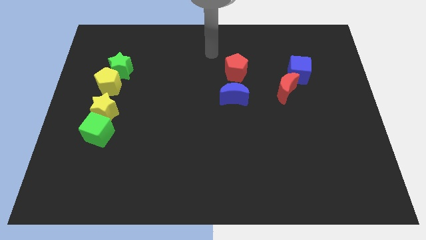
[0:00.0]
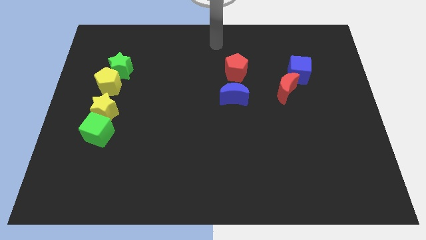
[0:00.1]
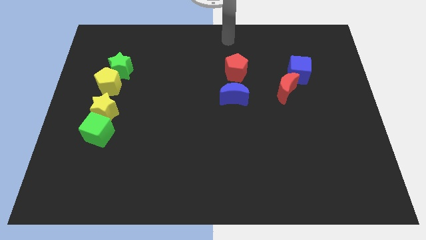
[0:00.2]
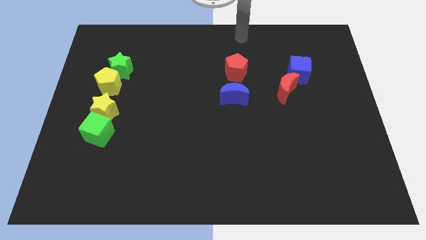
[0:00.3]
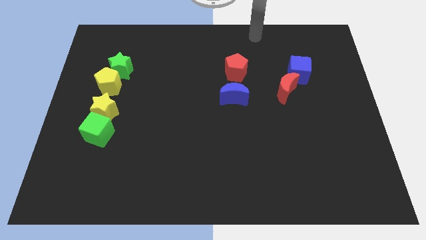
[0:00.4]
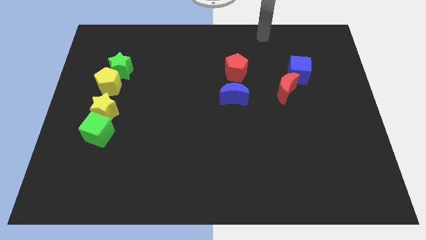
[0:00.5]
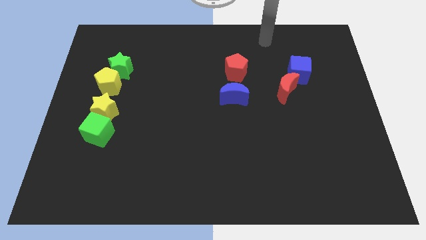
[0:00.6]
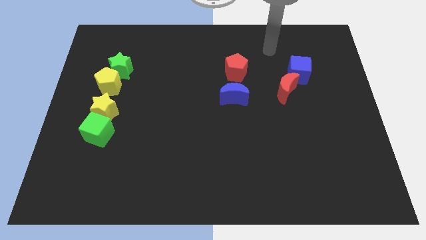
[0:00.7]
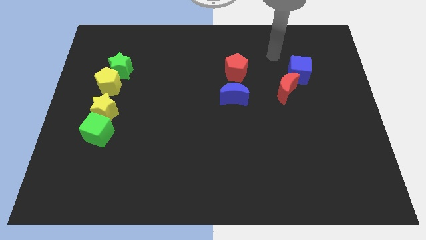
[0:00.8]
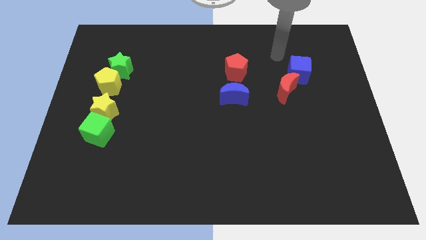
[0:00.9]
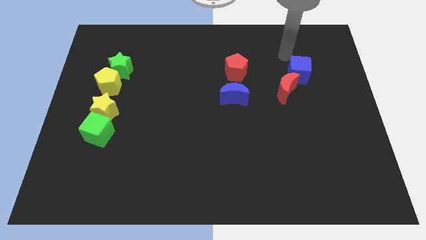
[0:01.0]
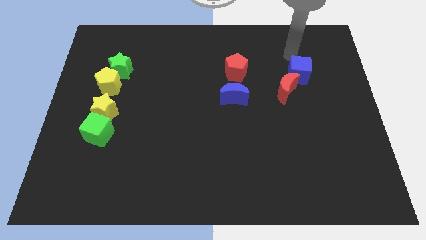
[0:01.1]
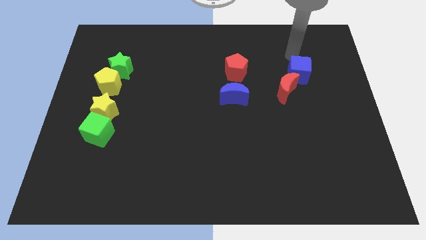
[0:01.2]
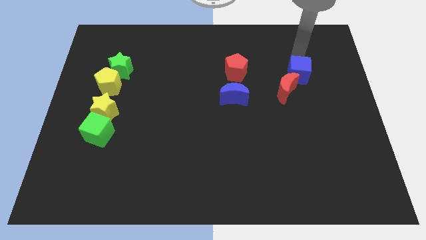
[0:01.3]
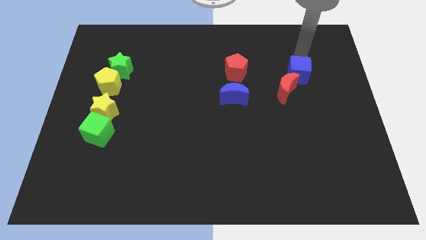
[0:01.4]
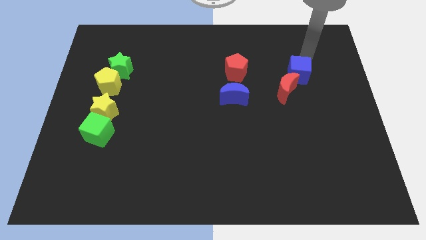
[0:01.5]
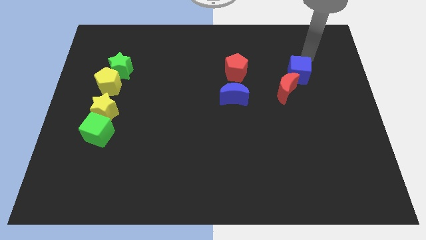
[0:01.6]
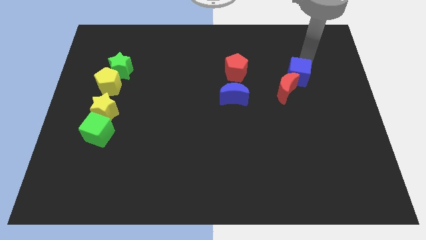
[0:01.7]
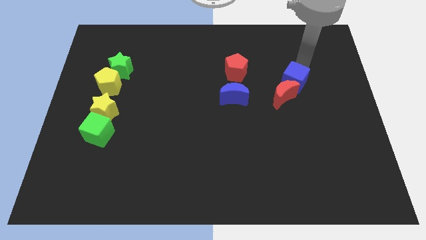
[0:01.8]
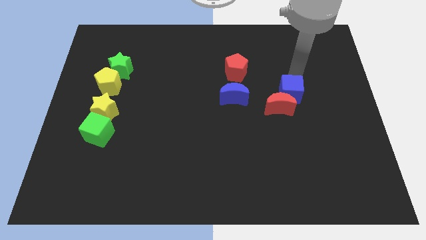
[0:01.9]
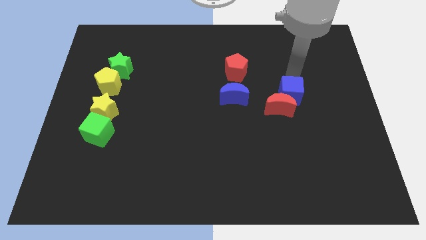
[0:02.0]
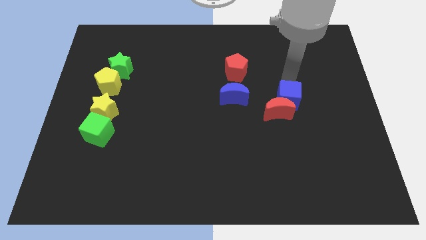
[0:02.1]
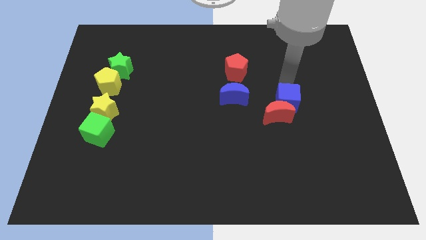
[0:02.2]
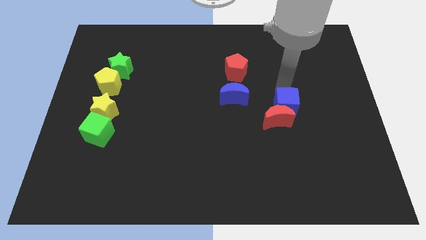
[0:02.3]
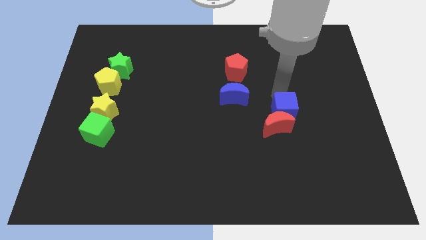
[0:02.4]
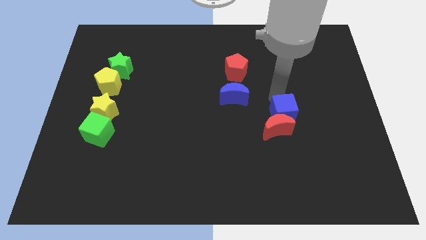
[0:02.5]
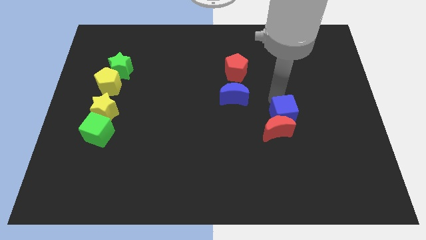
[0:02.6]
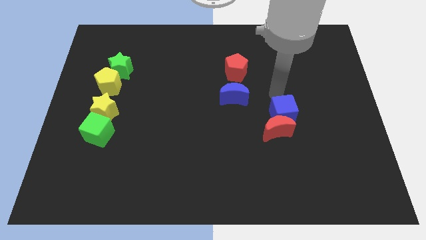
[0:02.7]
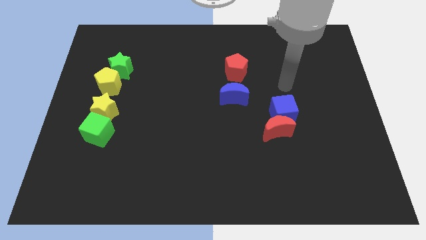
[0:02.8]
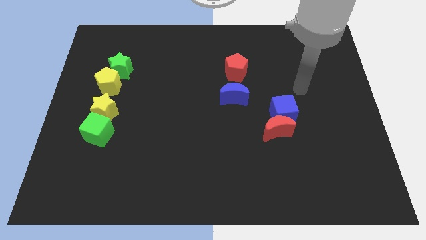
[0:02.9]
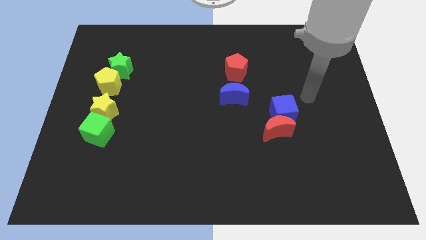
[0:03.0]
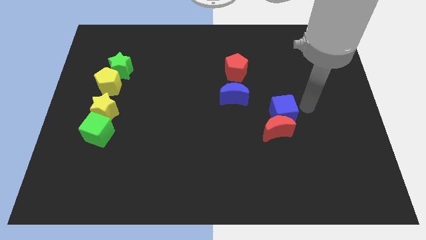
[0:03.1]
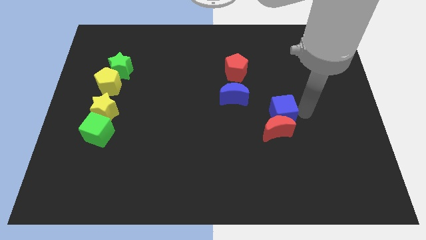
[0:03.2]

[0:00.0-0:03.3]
slide the blue cube red moon downwards

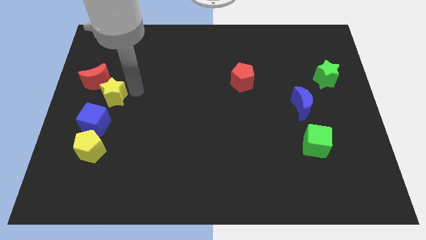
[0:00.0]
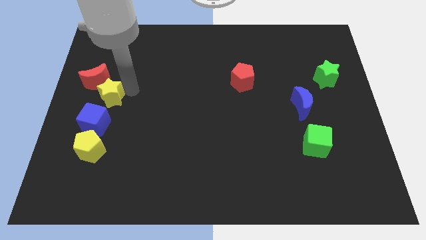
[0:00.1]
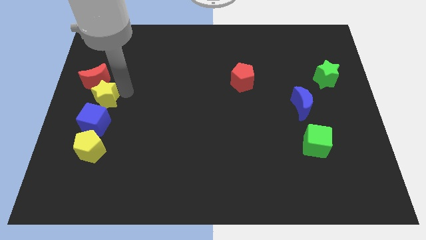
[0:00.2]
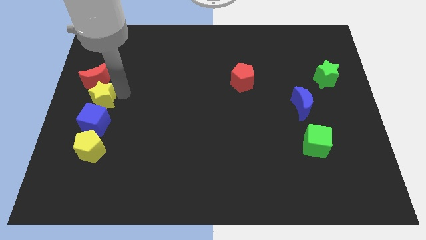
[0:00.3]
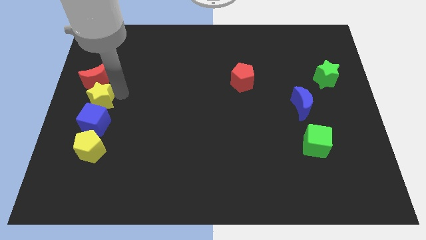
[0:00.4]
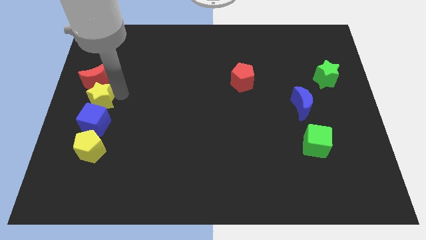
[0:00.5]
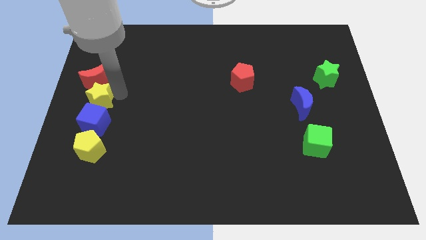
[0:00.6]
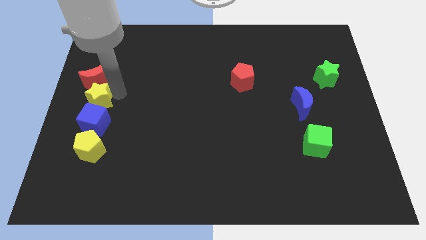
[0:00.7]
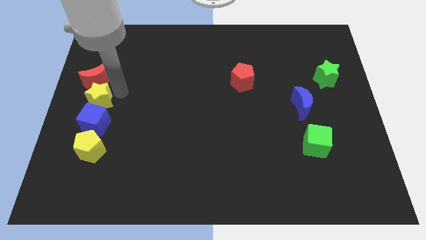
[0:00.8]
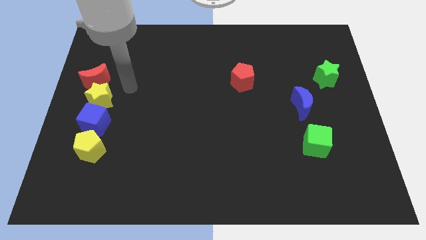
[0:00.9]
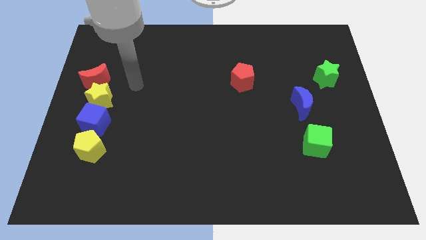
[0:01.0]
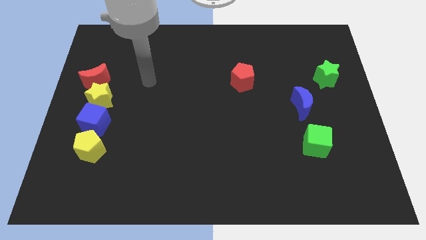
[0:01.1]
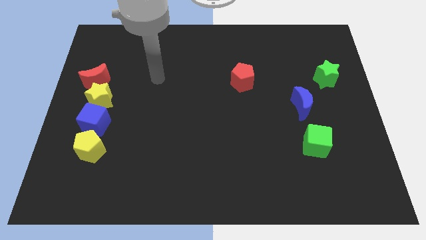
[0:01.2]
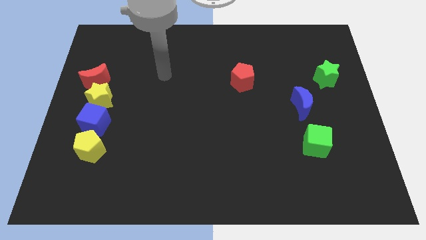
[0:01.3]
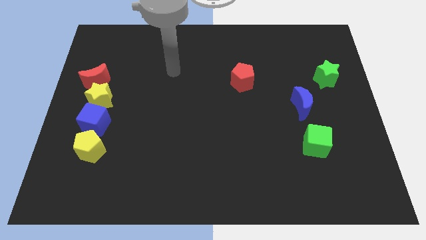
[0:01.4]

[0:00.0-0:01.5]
place a yellow star in between the red crescent and the blue cube

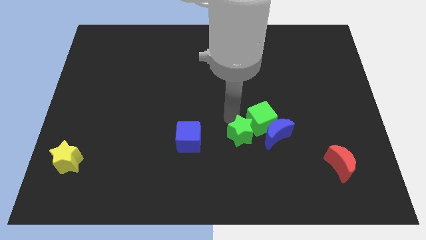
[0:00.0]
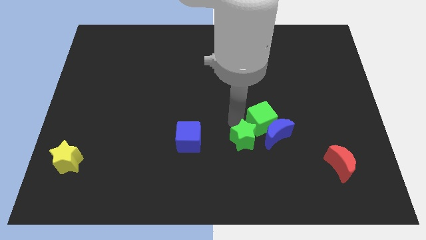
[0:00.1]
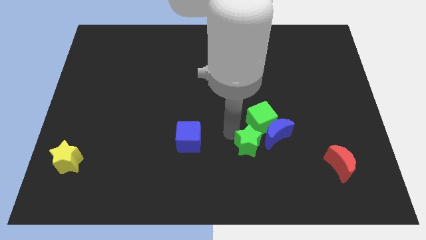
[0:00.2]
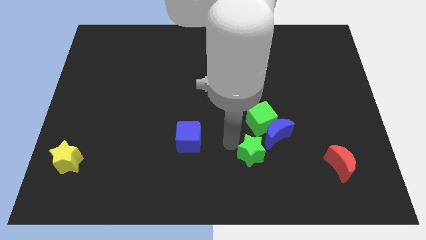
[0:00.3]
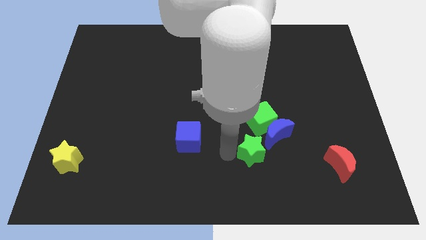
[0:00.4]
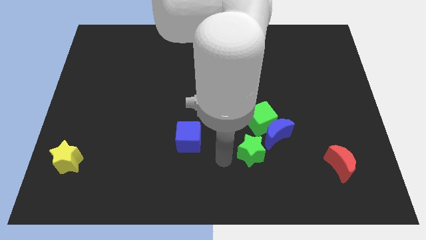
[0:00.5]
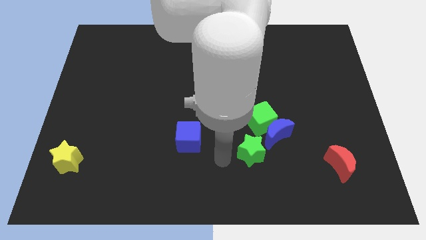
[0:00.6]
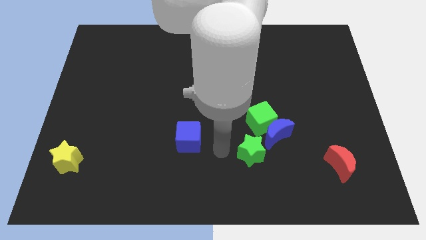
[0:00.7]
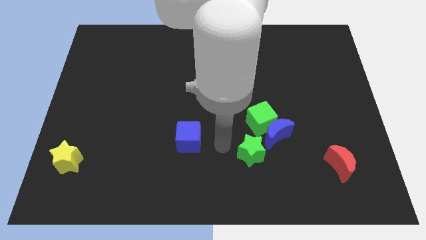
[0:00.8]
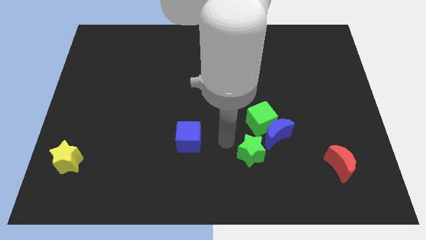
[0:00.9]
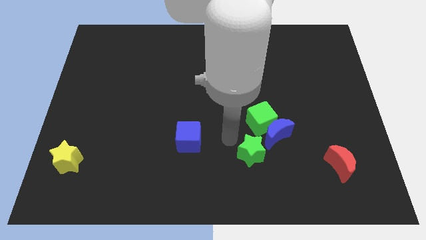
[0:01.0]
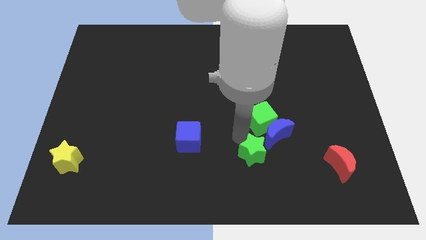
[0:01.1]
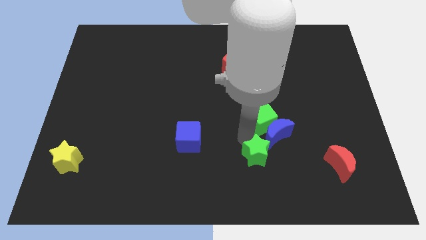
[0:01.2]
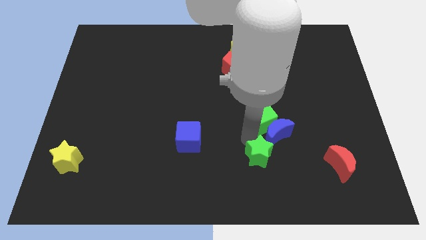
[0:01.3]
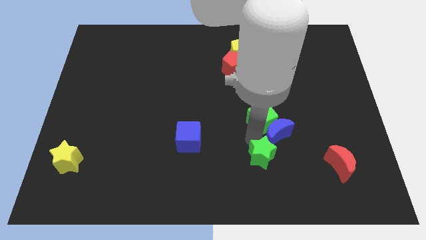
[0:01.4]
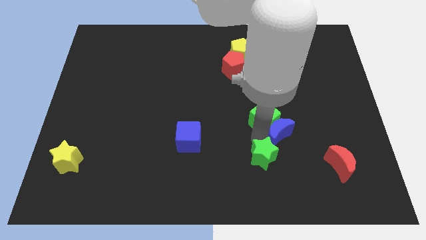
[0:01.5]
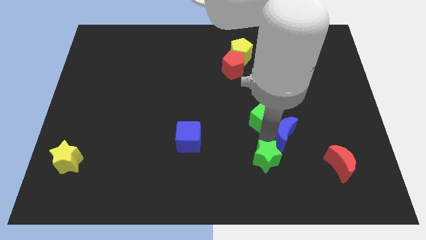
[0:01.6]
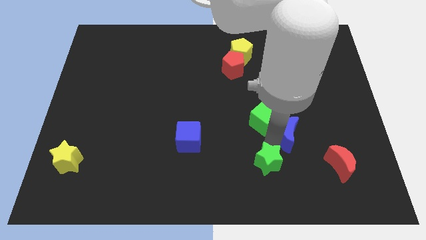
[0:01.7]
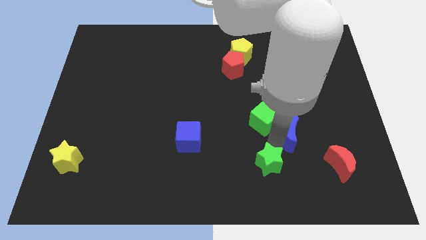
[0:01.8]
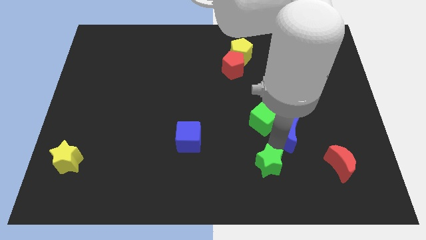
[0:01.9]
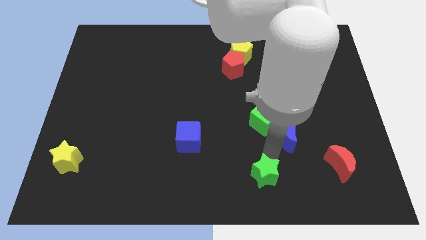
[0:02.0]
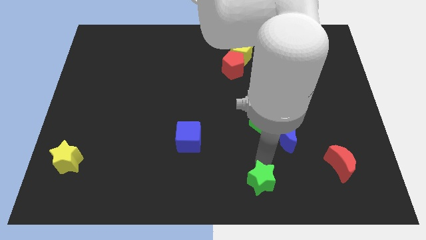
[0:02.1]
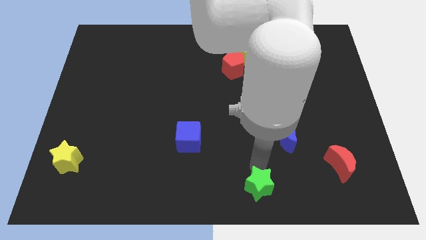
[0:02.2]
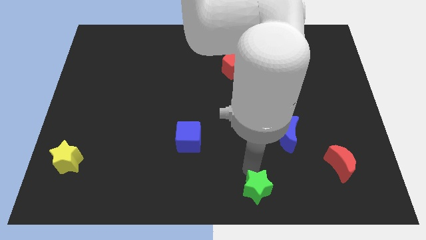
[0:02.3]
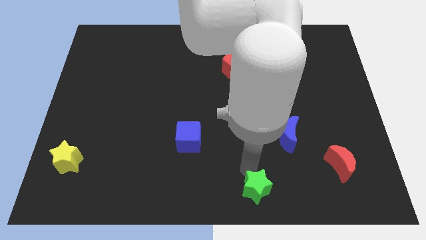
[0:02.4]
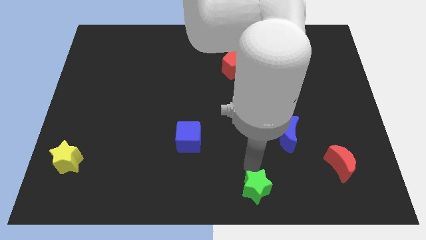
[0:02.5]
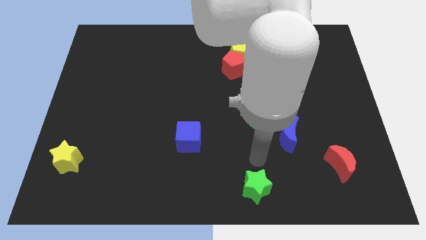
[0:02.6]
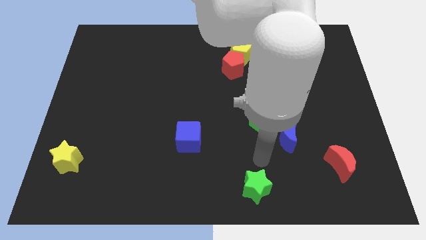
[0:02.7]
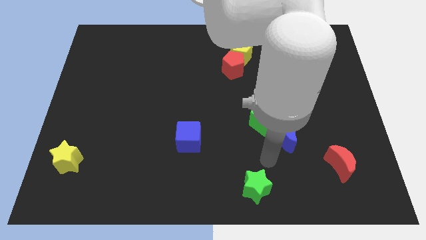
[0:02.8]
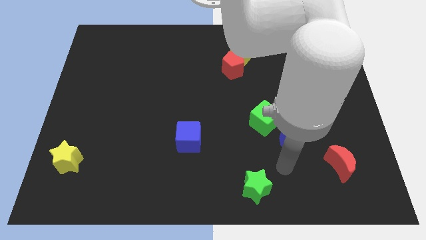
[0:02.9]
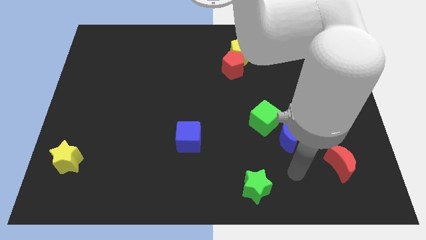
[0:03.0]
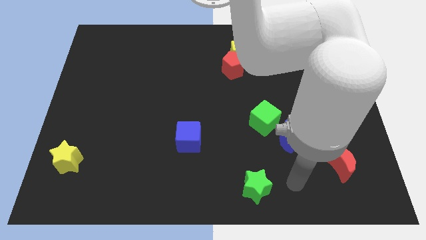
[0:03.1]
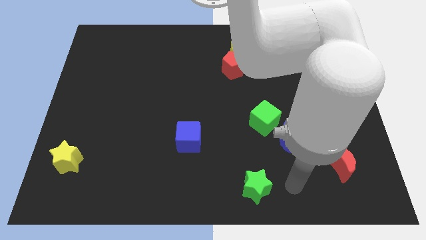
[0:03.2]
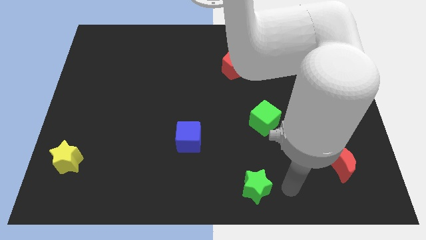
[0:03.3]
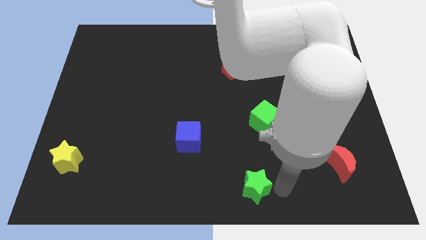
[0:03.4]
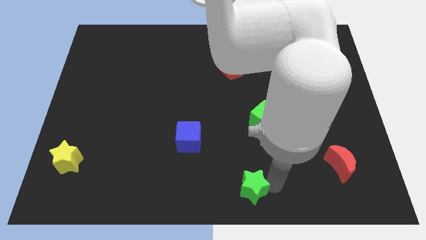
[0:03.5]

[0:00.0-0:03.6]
separate the green star and the green cube
